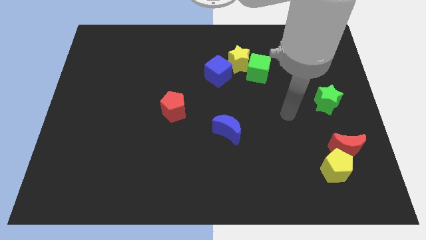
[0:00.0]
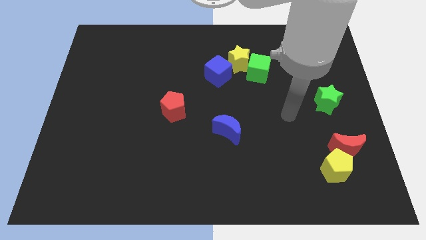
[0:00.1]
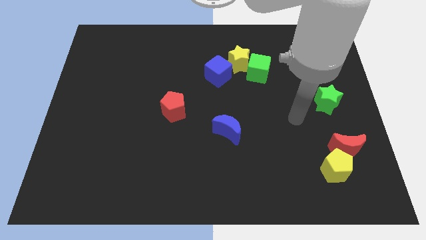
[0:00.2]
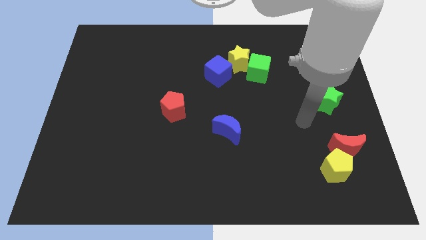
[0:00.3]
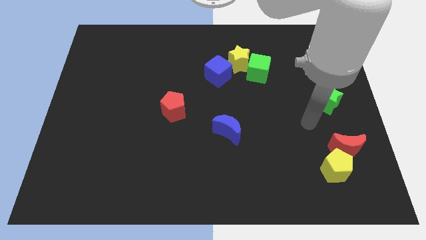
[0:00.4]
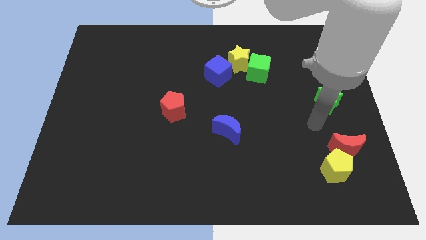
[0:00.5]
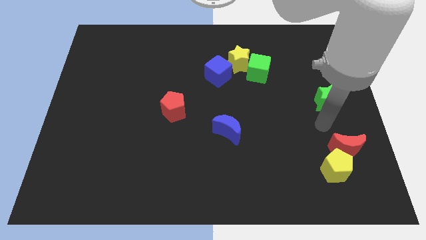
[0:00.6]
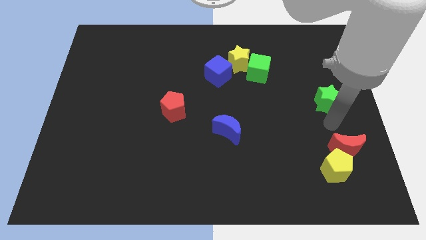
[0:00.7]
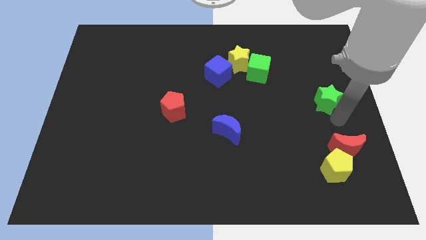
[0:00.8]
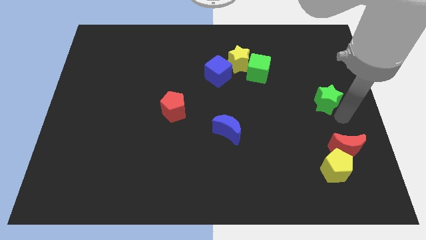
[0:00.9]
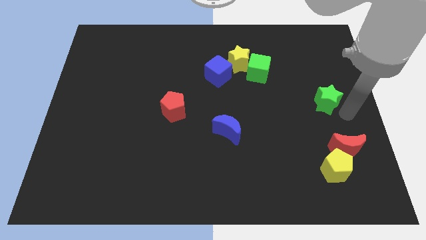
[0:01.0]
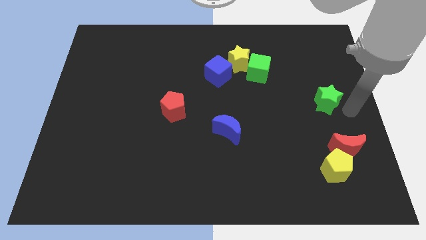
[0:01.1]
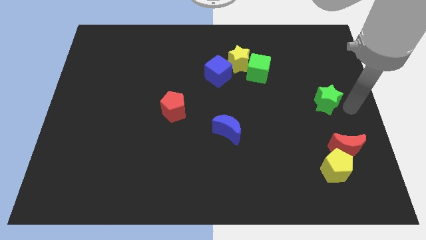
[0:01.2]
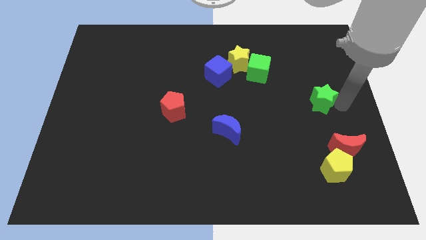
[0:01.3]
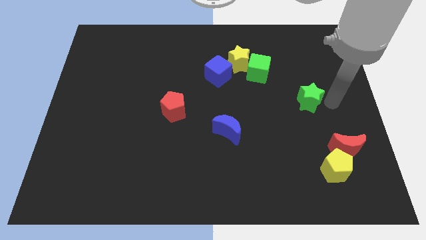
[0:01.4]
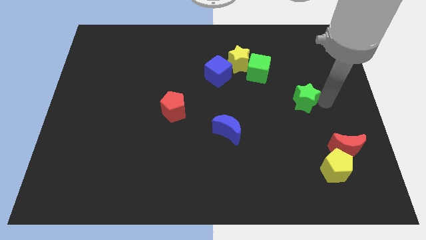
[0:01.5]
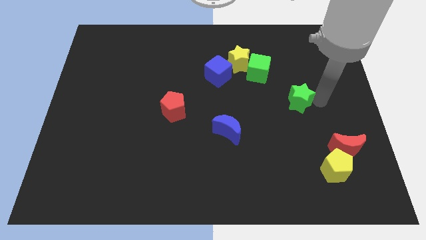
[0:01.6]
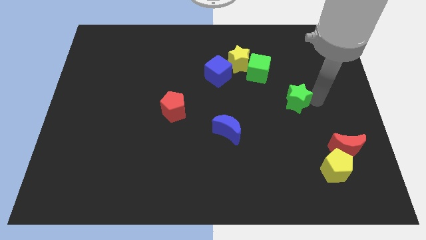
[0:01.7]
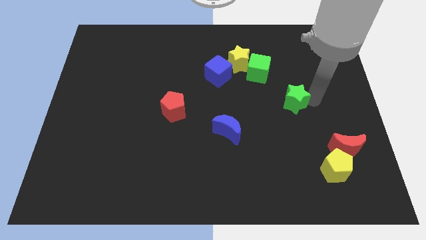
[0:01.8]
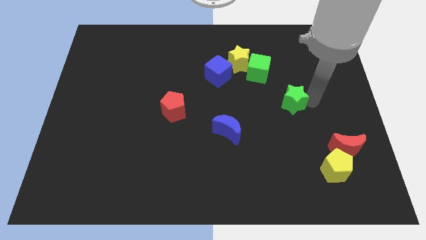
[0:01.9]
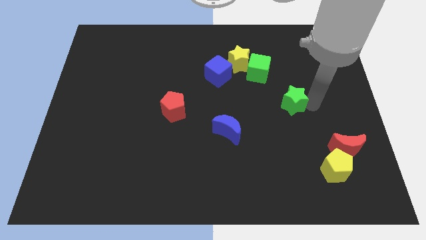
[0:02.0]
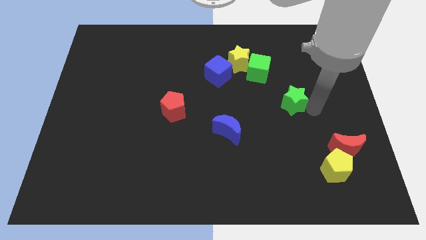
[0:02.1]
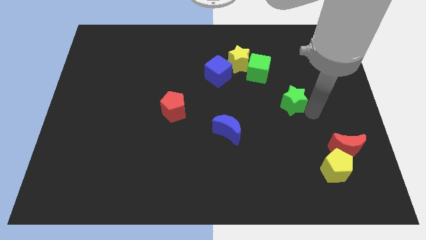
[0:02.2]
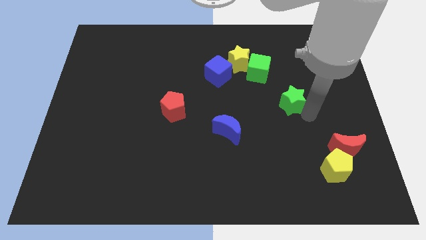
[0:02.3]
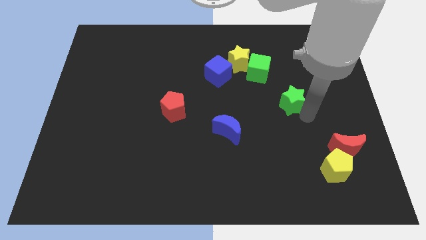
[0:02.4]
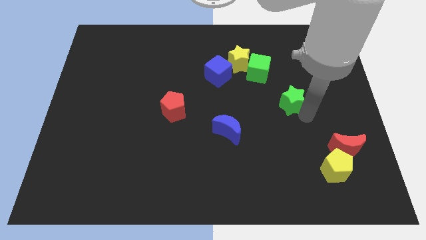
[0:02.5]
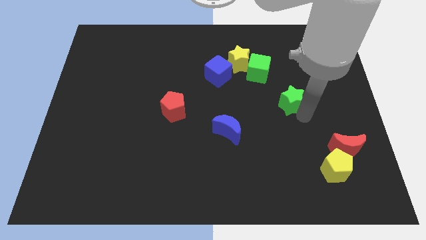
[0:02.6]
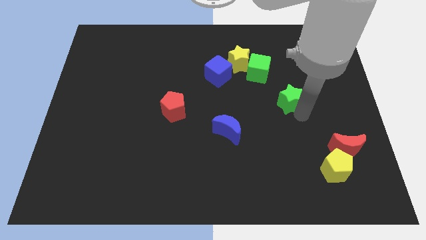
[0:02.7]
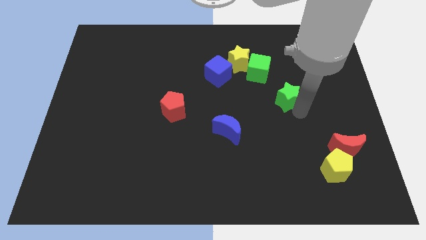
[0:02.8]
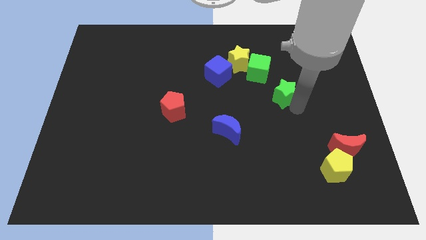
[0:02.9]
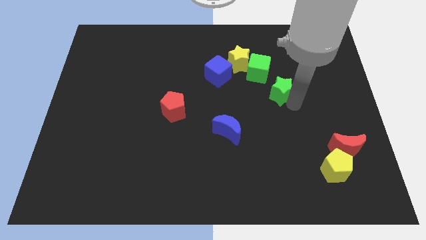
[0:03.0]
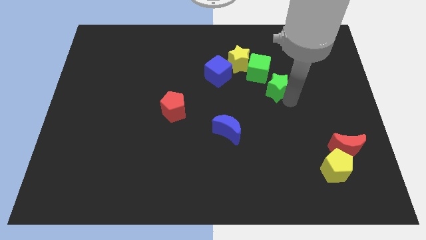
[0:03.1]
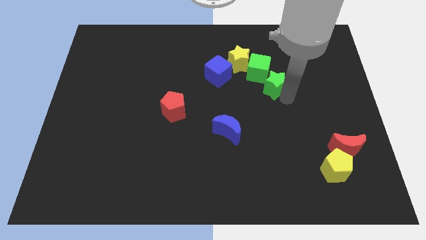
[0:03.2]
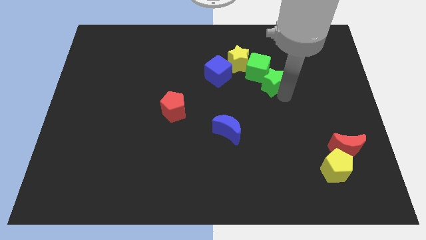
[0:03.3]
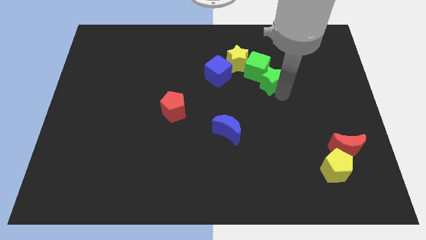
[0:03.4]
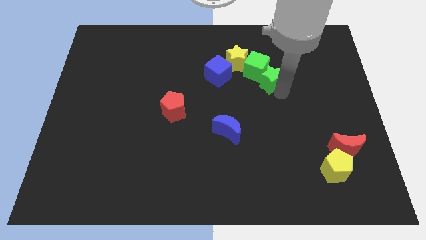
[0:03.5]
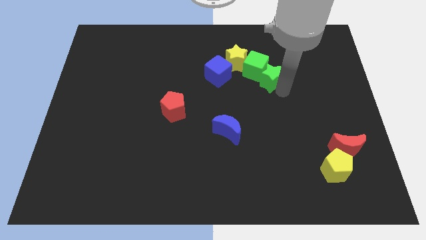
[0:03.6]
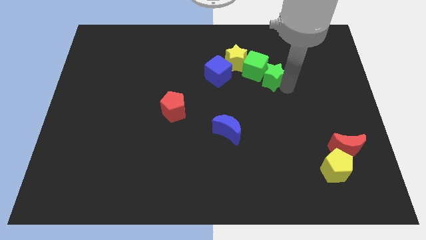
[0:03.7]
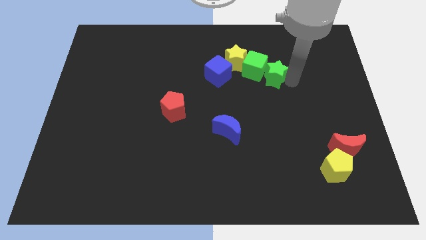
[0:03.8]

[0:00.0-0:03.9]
move the green star to the right of the green cube

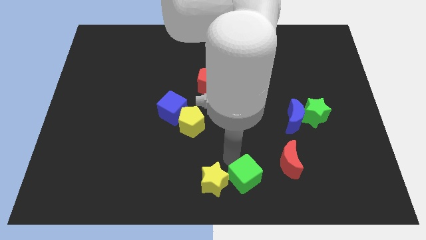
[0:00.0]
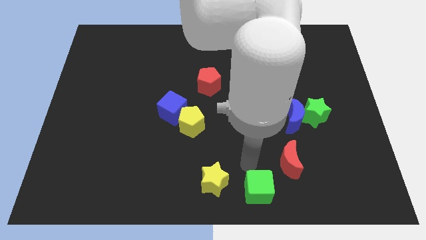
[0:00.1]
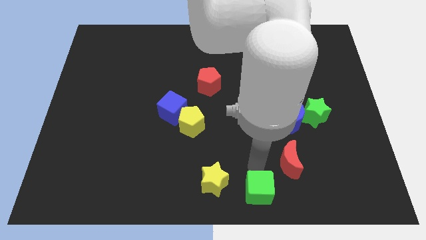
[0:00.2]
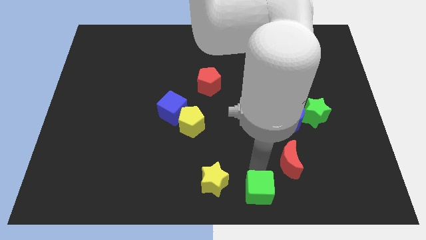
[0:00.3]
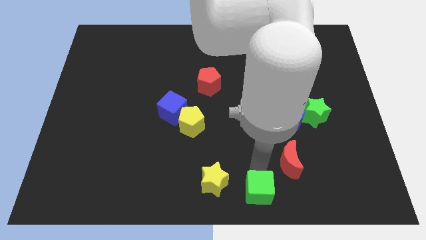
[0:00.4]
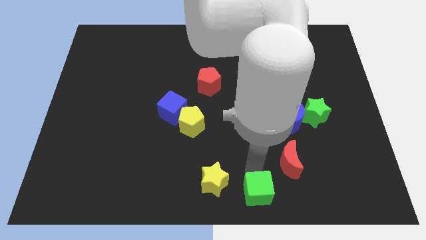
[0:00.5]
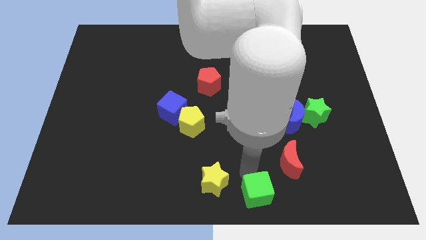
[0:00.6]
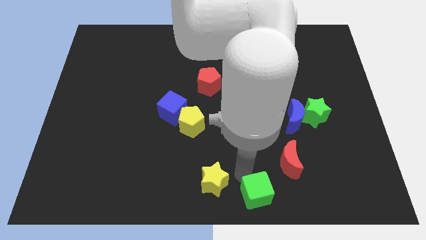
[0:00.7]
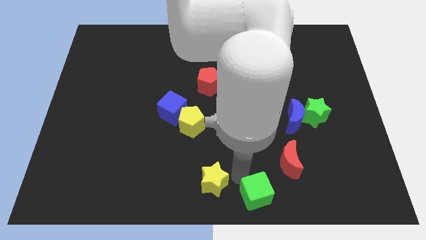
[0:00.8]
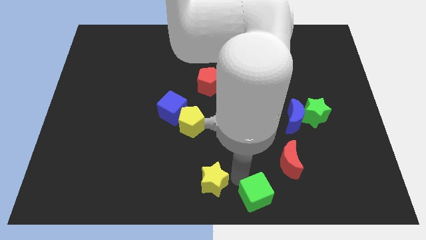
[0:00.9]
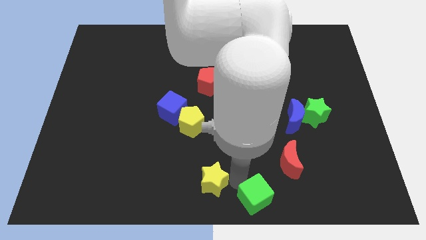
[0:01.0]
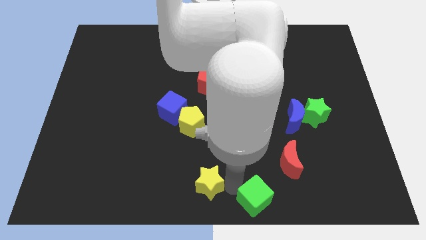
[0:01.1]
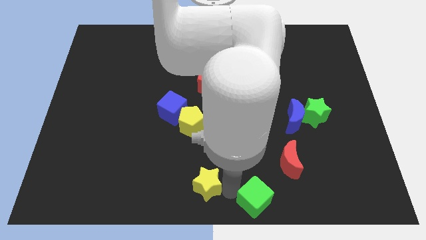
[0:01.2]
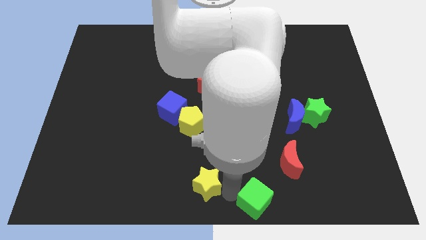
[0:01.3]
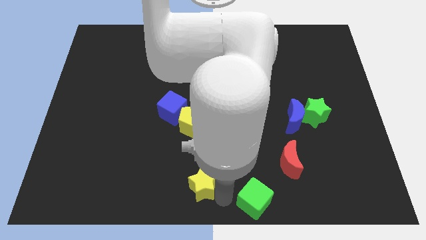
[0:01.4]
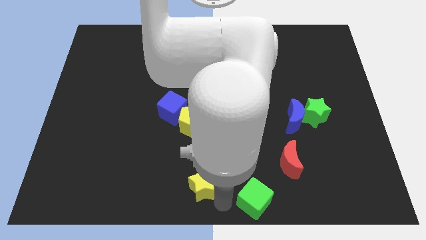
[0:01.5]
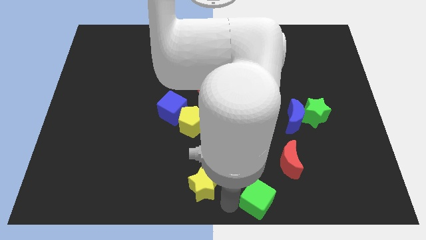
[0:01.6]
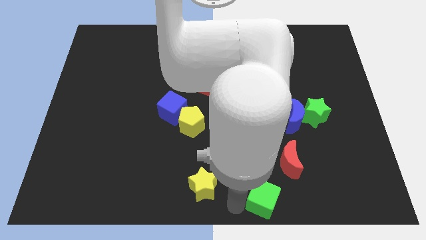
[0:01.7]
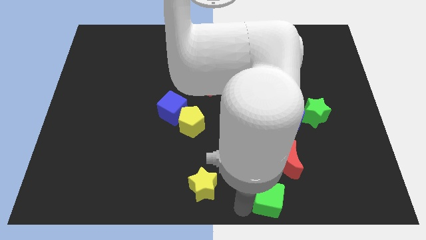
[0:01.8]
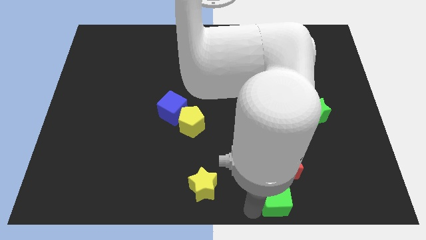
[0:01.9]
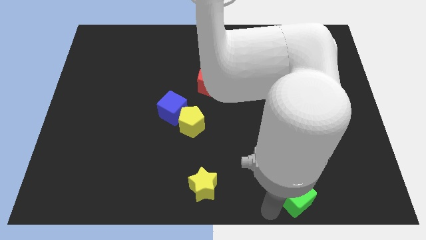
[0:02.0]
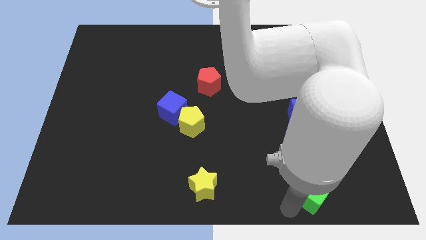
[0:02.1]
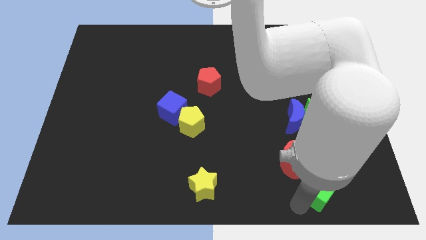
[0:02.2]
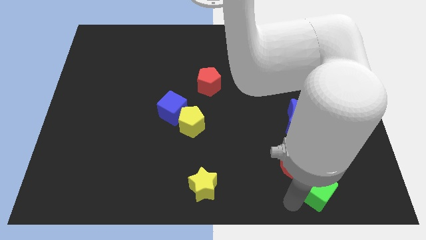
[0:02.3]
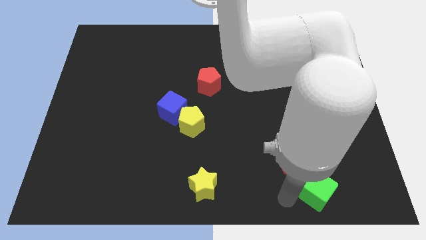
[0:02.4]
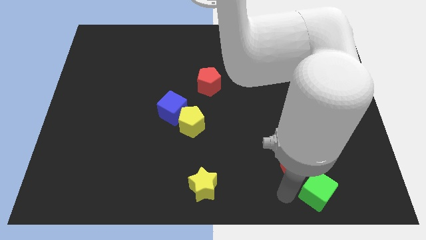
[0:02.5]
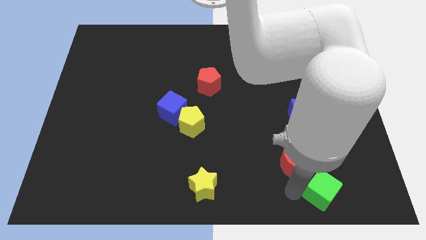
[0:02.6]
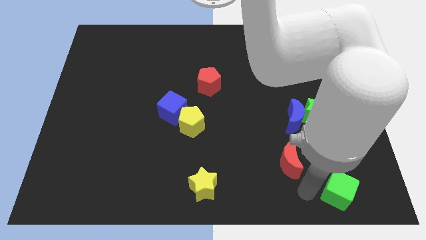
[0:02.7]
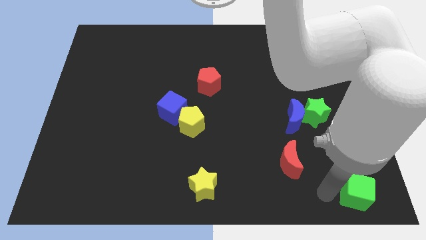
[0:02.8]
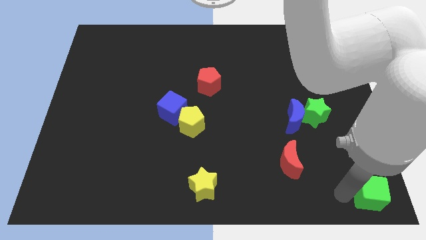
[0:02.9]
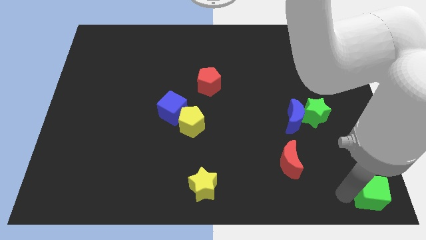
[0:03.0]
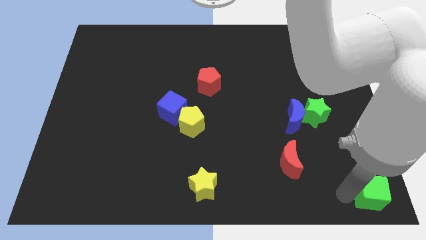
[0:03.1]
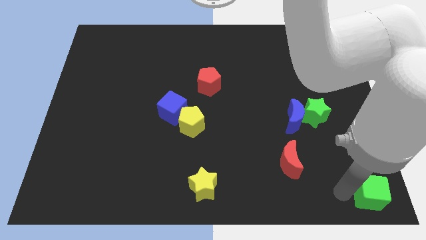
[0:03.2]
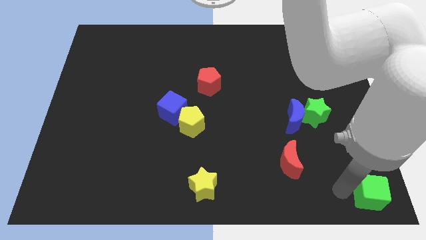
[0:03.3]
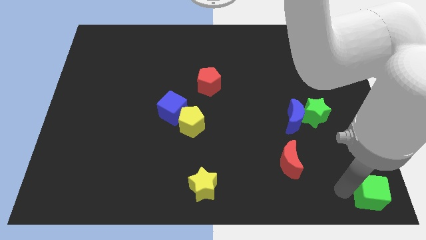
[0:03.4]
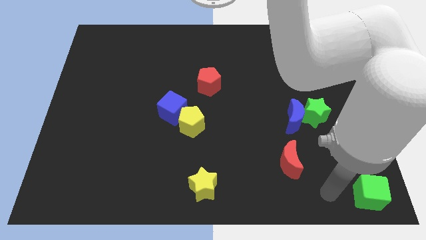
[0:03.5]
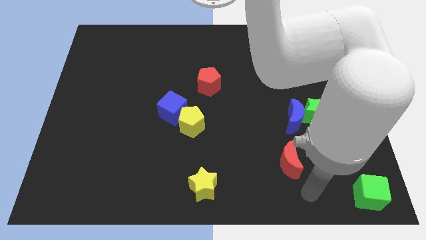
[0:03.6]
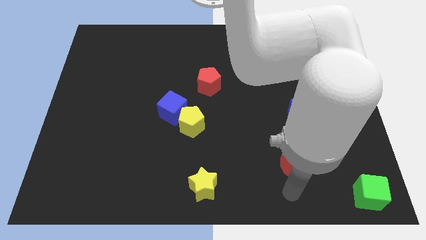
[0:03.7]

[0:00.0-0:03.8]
place the green cube at the bottom right corner of the board

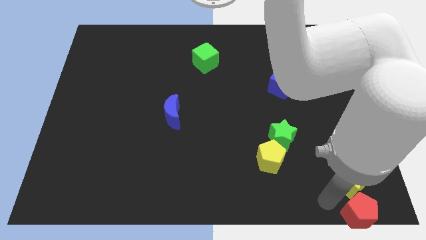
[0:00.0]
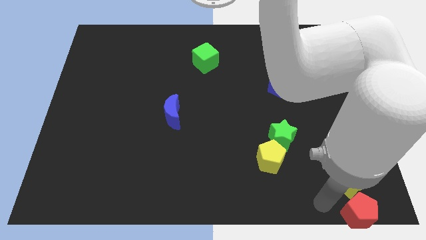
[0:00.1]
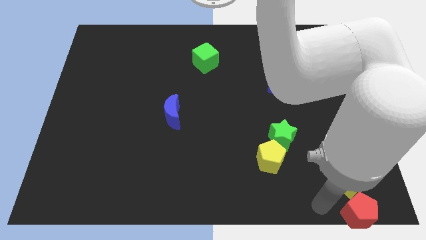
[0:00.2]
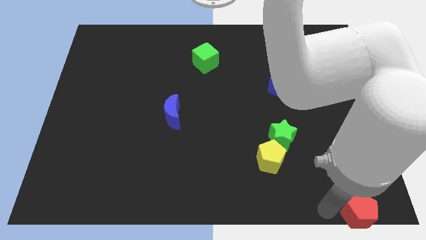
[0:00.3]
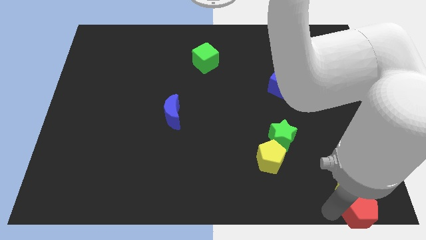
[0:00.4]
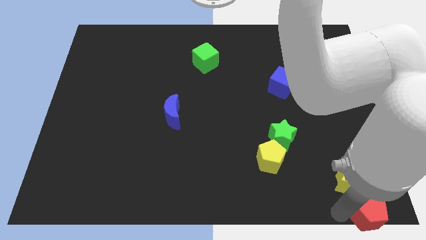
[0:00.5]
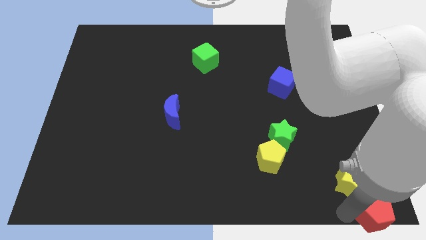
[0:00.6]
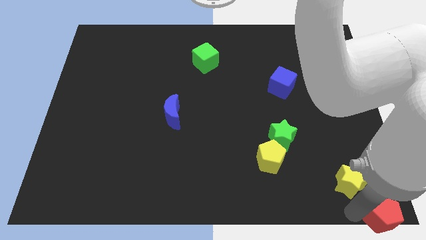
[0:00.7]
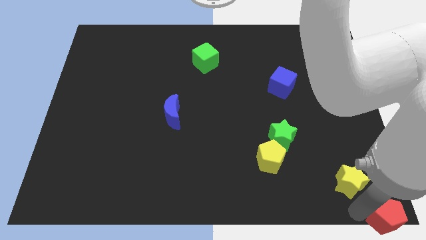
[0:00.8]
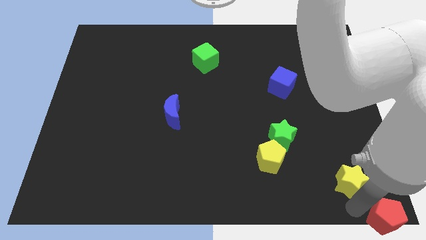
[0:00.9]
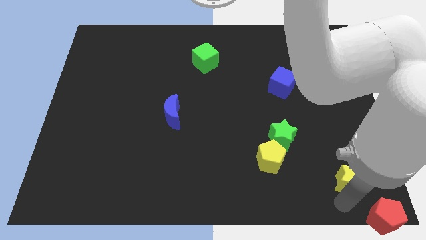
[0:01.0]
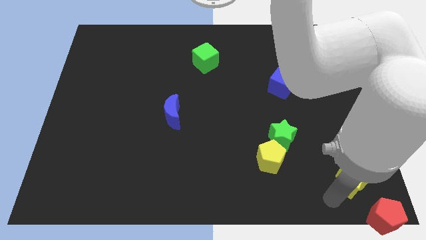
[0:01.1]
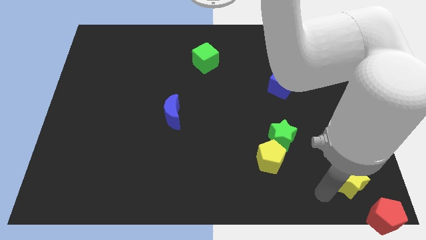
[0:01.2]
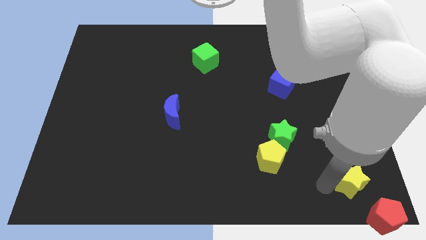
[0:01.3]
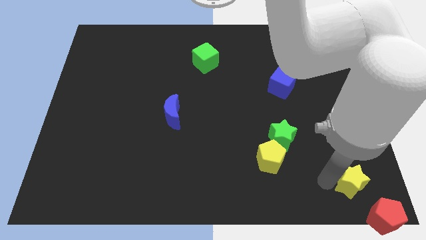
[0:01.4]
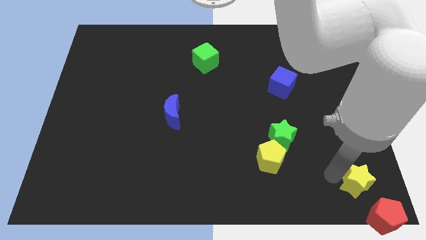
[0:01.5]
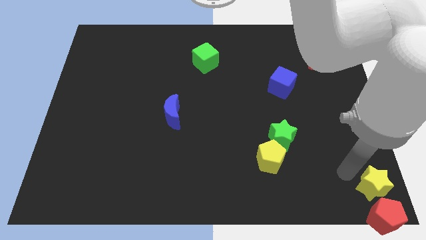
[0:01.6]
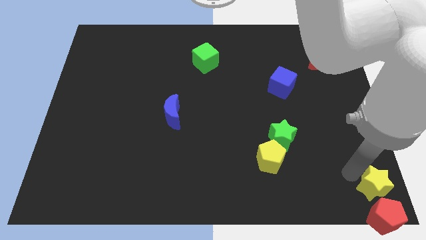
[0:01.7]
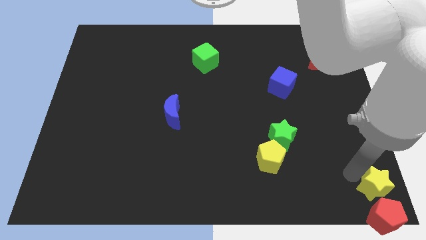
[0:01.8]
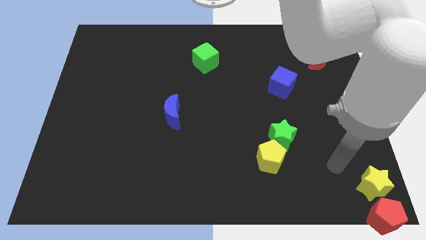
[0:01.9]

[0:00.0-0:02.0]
place the yellow star and red pentagon at the bottom right corner of the board
